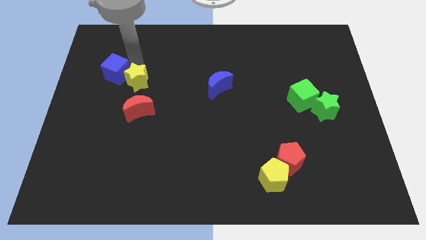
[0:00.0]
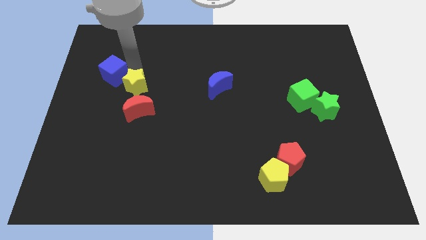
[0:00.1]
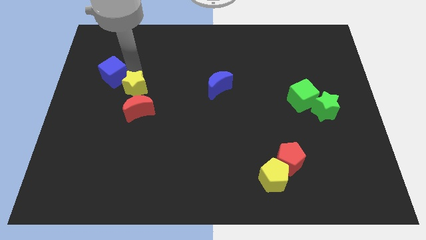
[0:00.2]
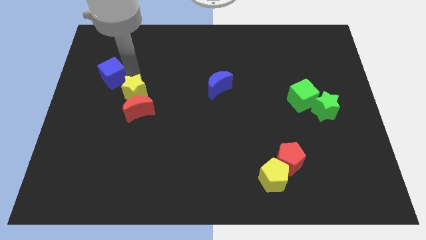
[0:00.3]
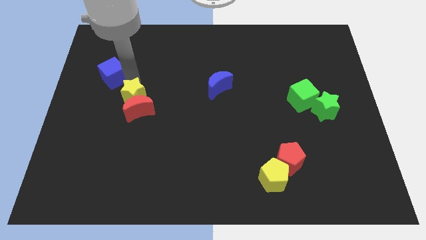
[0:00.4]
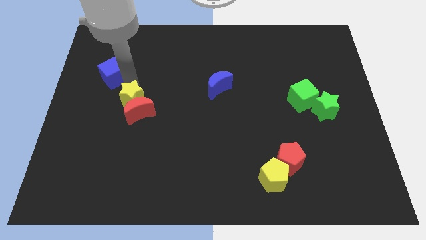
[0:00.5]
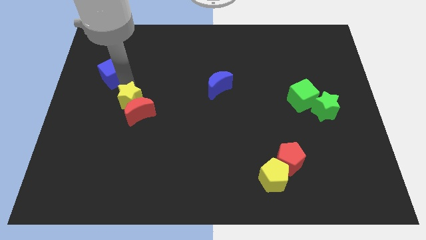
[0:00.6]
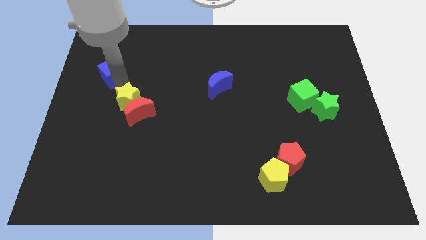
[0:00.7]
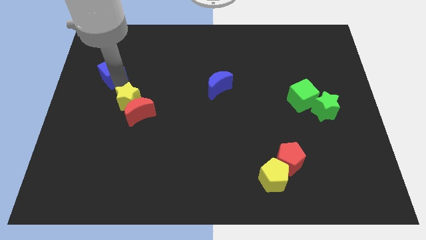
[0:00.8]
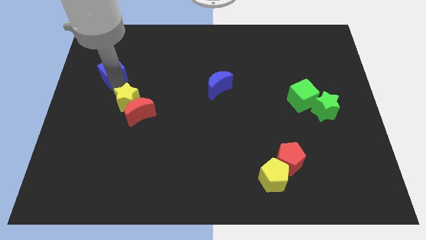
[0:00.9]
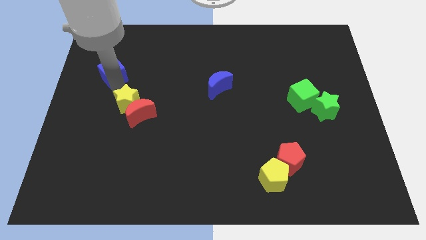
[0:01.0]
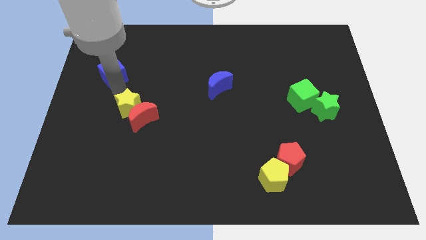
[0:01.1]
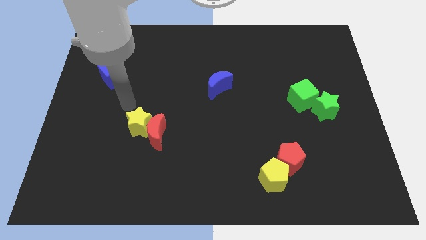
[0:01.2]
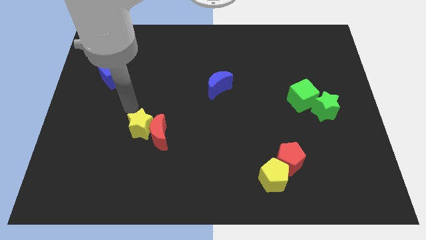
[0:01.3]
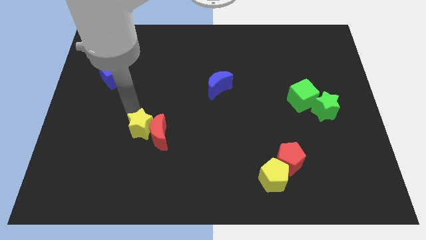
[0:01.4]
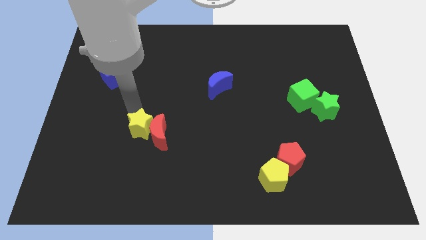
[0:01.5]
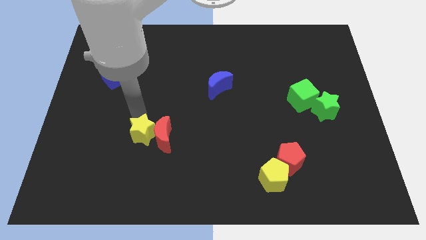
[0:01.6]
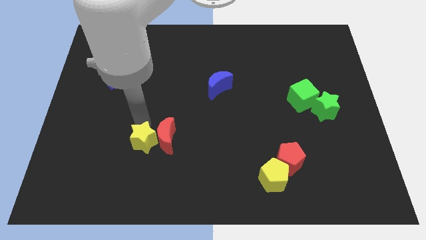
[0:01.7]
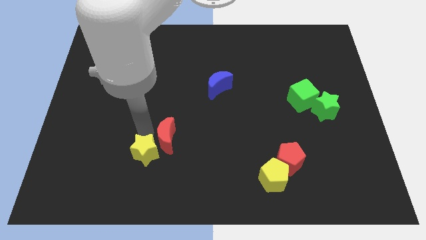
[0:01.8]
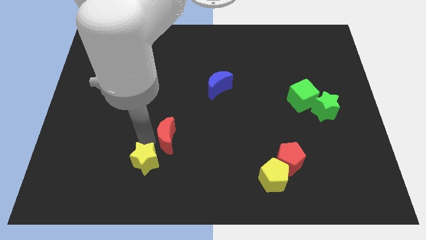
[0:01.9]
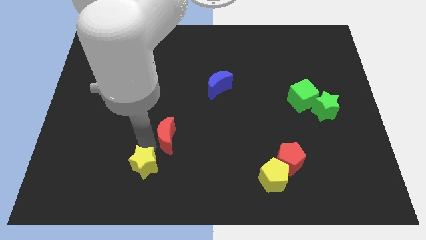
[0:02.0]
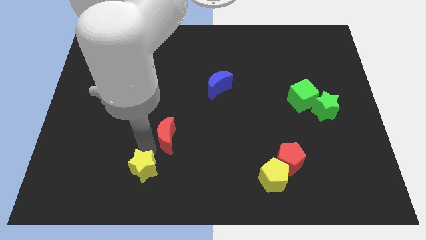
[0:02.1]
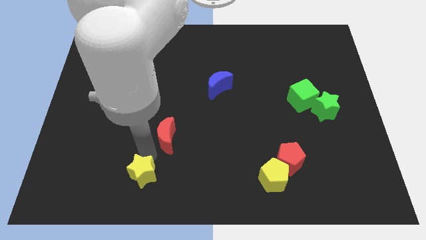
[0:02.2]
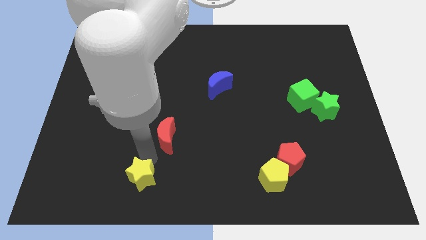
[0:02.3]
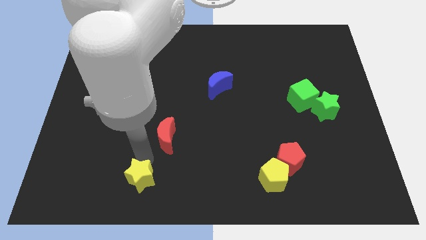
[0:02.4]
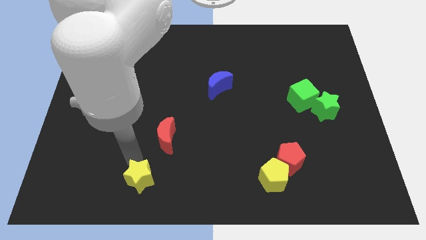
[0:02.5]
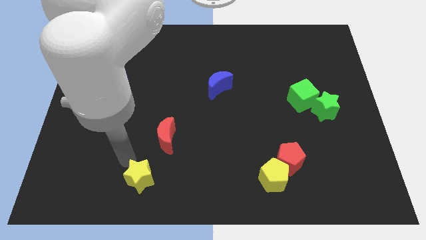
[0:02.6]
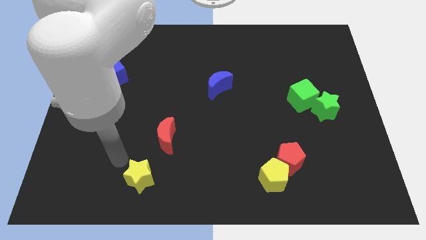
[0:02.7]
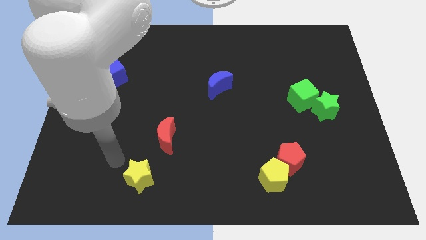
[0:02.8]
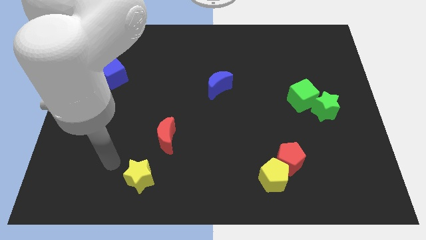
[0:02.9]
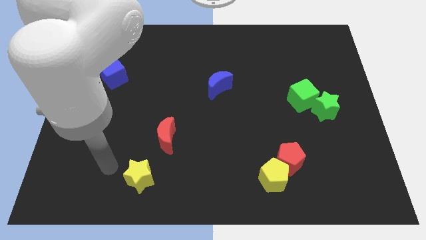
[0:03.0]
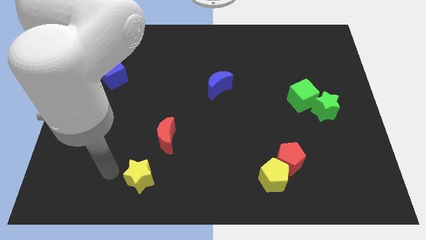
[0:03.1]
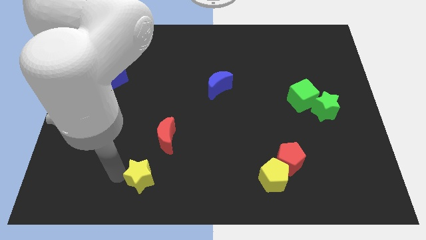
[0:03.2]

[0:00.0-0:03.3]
push the red moon with the yellow star

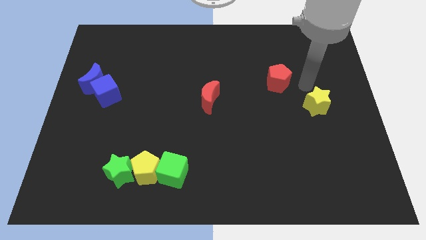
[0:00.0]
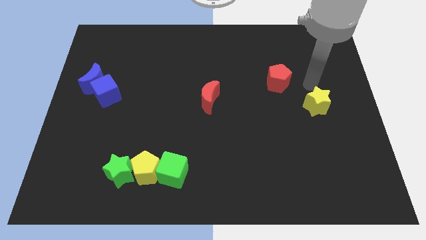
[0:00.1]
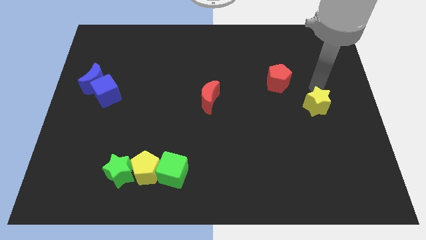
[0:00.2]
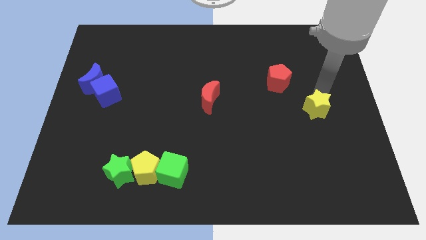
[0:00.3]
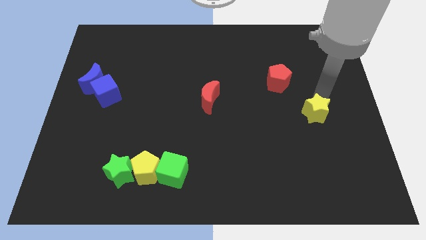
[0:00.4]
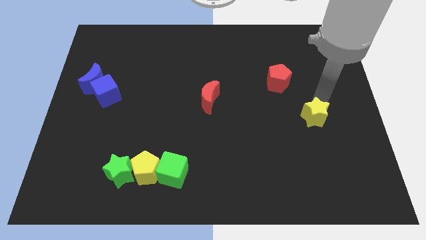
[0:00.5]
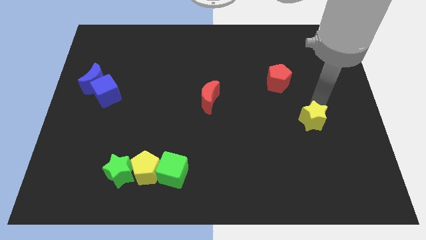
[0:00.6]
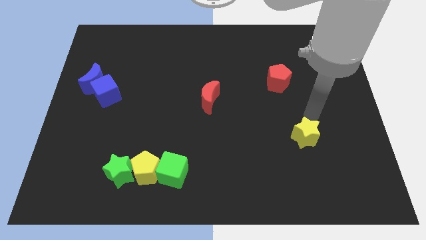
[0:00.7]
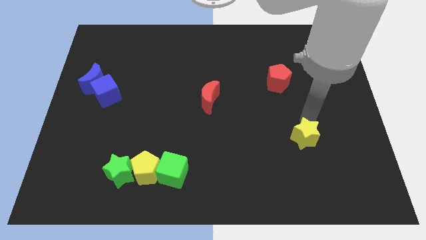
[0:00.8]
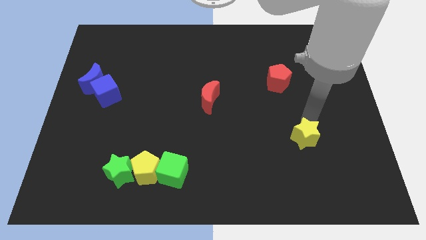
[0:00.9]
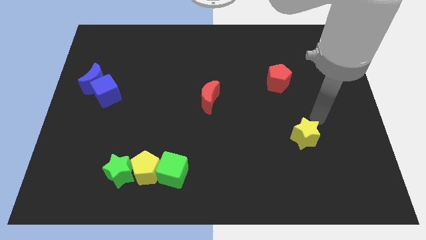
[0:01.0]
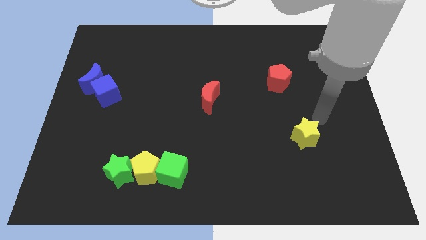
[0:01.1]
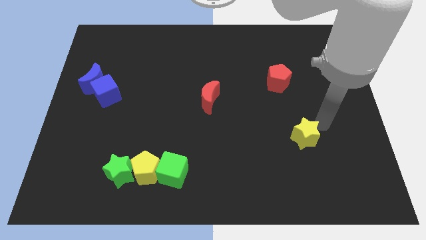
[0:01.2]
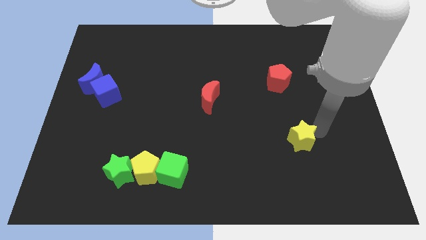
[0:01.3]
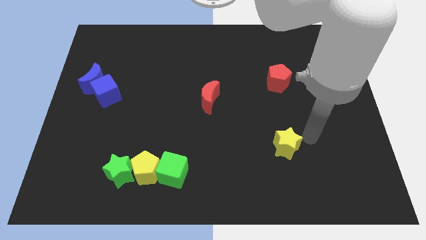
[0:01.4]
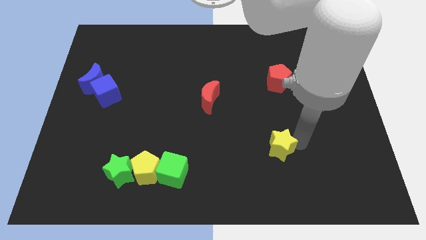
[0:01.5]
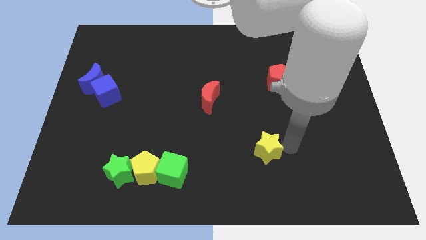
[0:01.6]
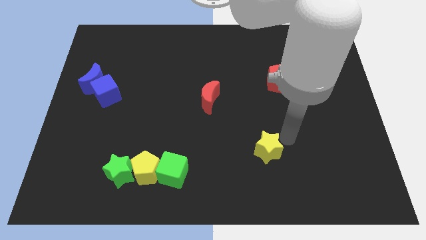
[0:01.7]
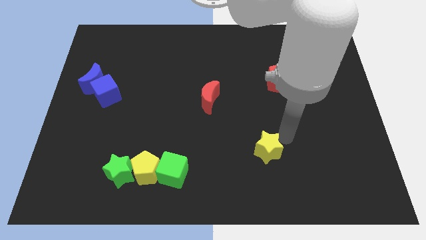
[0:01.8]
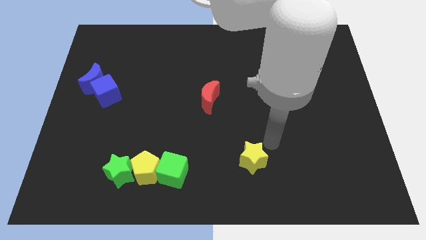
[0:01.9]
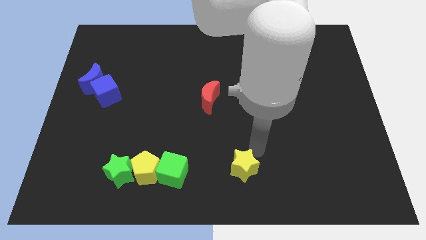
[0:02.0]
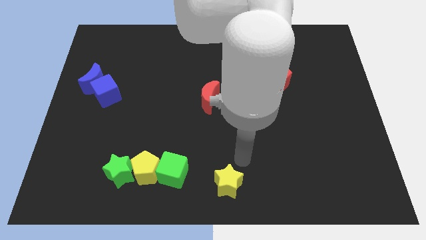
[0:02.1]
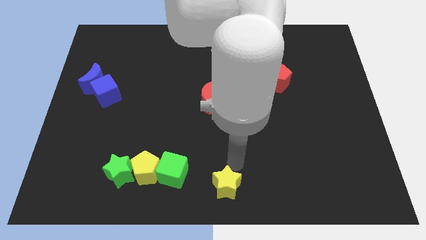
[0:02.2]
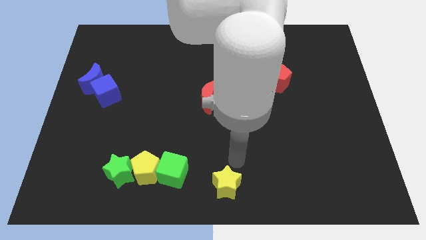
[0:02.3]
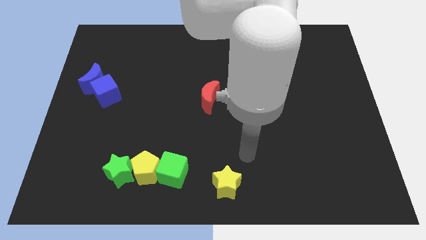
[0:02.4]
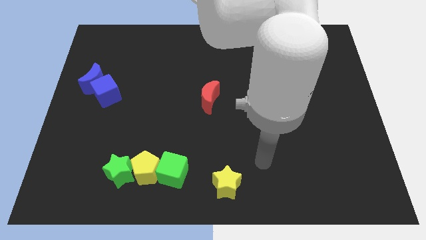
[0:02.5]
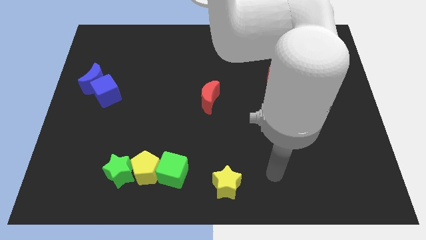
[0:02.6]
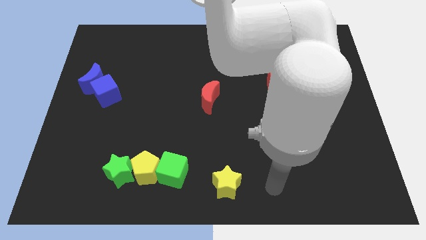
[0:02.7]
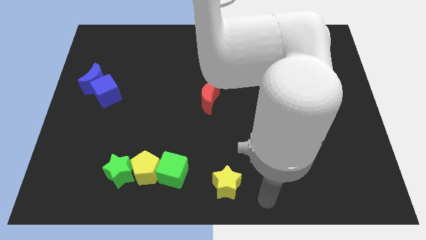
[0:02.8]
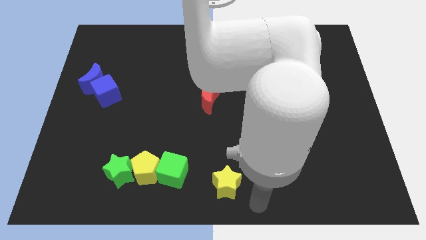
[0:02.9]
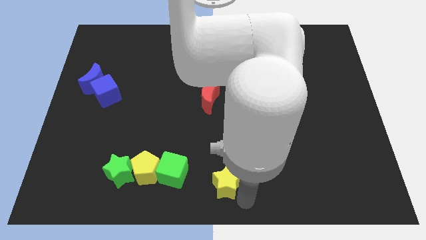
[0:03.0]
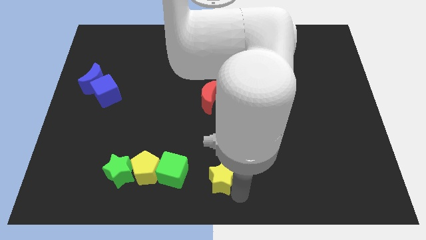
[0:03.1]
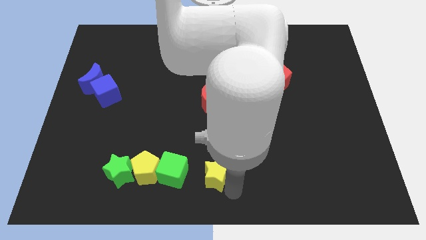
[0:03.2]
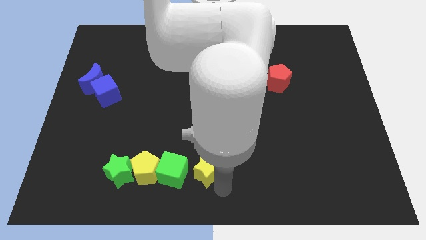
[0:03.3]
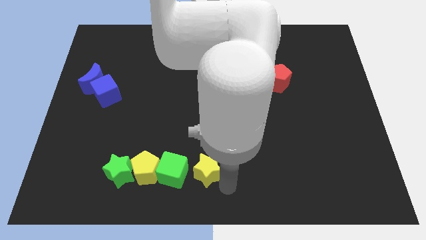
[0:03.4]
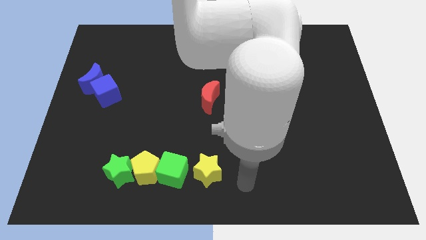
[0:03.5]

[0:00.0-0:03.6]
put the yellow star at the right side of the green cube

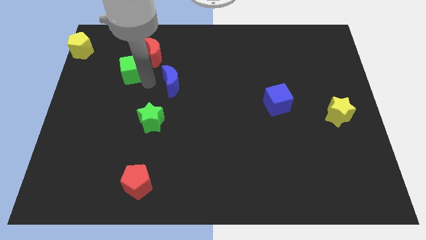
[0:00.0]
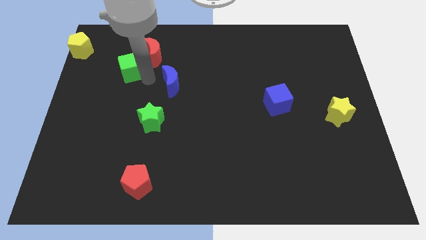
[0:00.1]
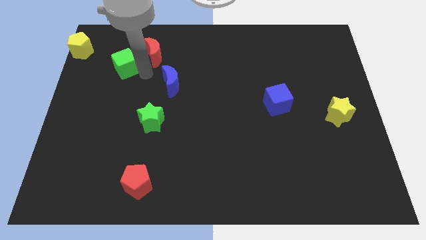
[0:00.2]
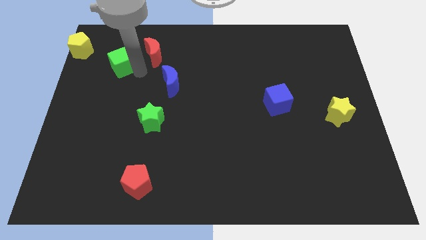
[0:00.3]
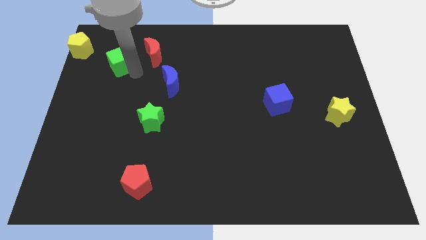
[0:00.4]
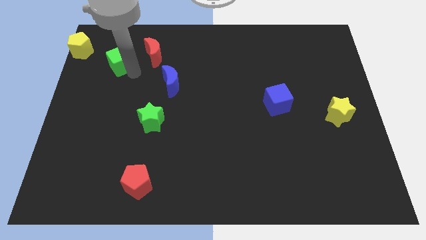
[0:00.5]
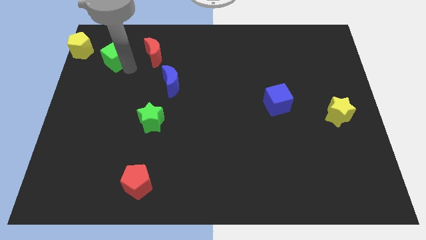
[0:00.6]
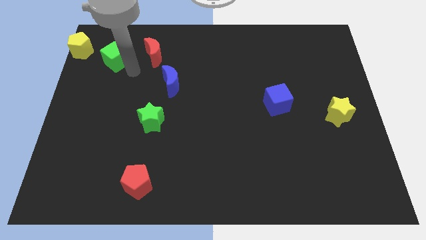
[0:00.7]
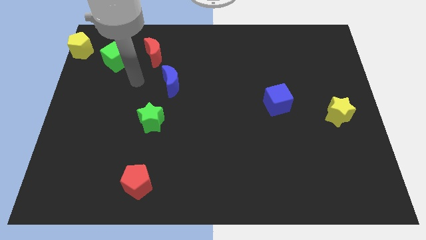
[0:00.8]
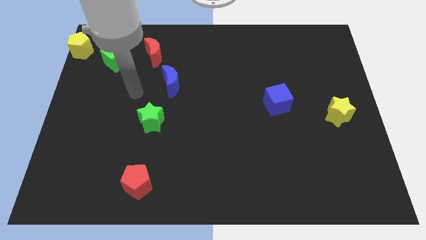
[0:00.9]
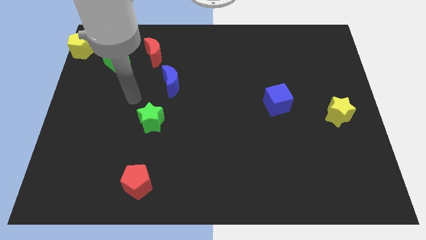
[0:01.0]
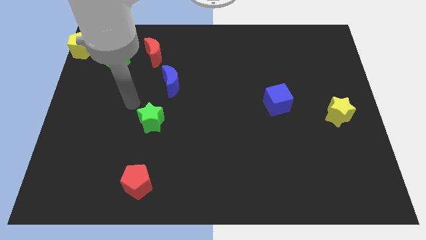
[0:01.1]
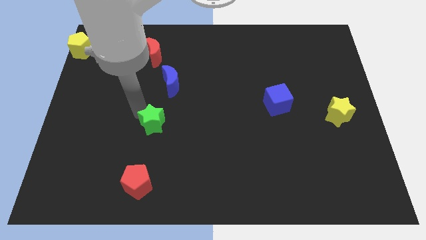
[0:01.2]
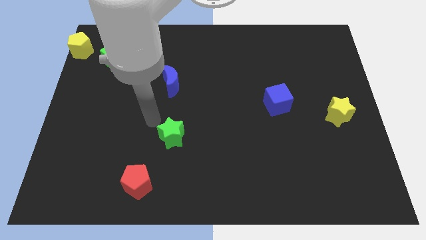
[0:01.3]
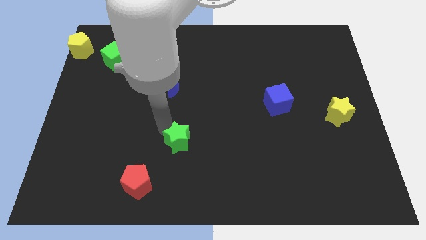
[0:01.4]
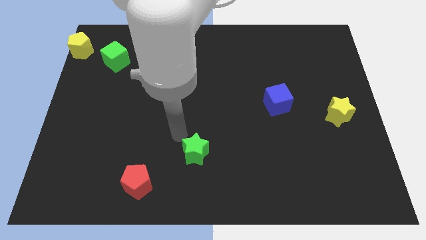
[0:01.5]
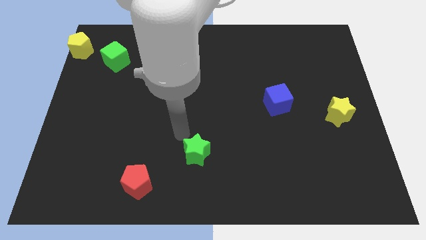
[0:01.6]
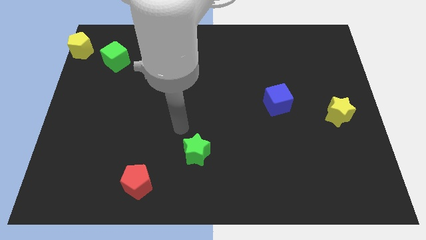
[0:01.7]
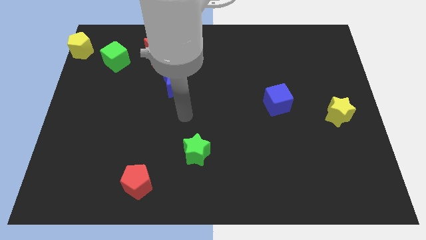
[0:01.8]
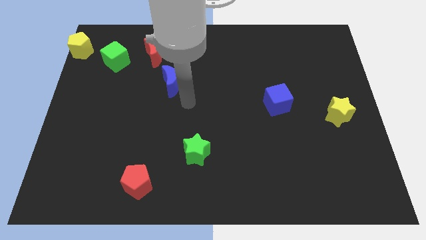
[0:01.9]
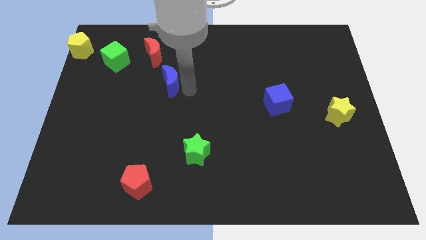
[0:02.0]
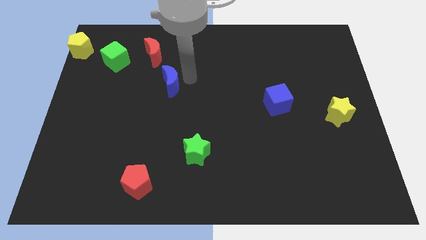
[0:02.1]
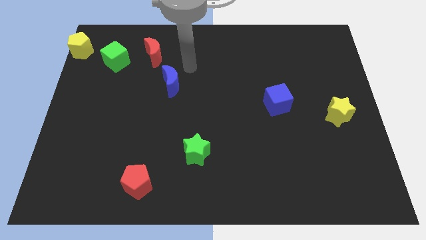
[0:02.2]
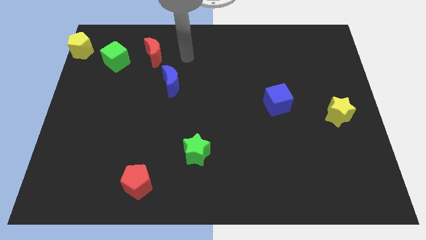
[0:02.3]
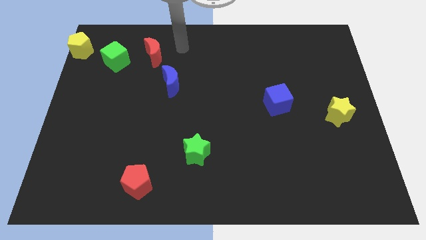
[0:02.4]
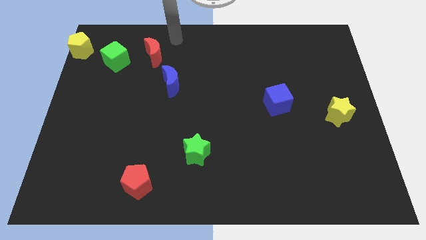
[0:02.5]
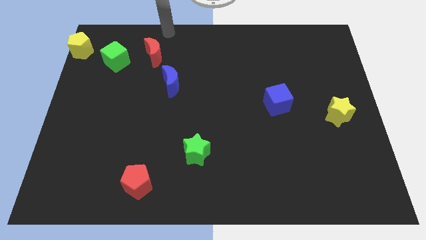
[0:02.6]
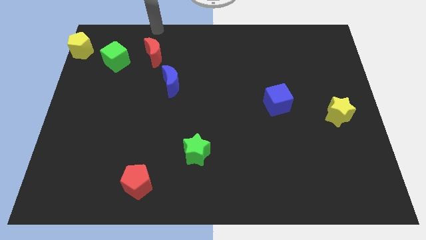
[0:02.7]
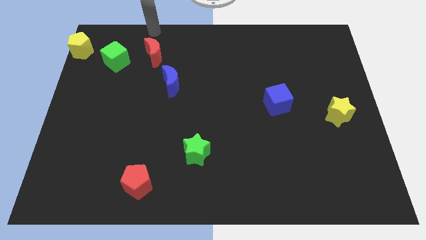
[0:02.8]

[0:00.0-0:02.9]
place the green star in between the blue cube and red pentagon
